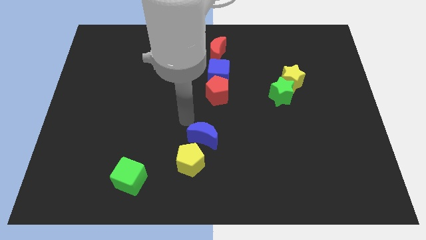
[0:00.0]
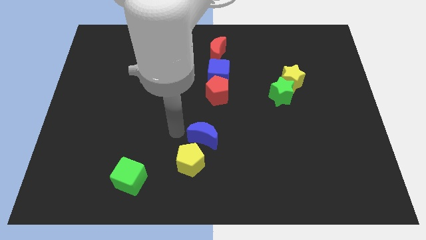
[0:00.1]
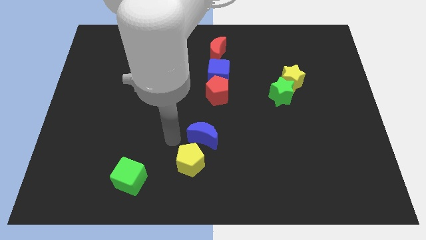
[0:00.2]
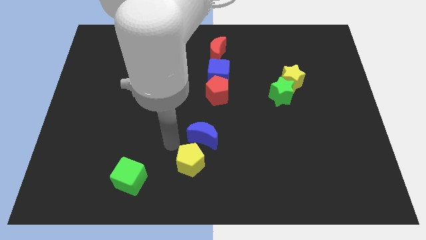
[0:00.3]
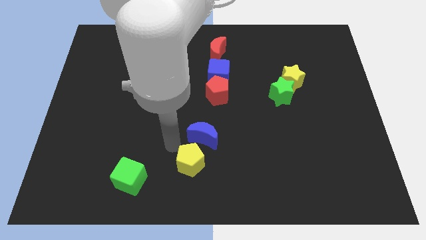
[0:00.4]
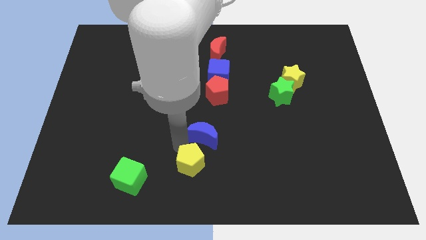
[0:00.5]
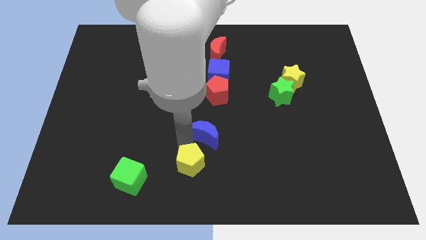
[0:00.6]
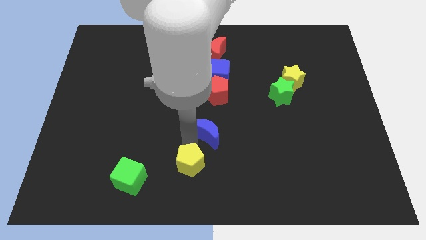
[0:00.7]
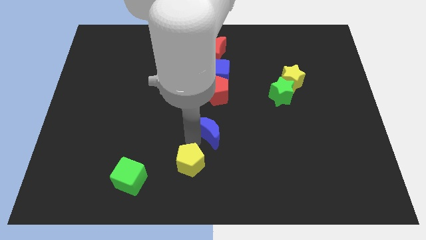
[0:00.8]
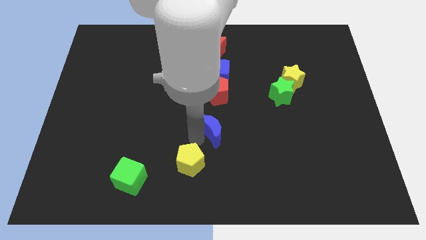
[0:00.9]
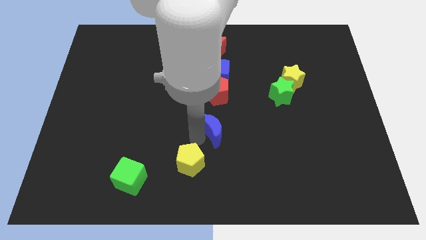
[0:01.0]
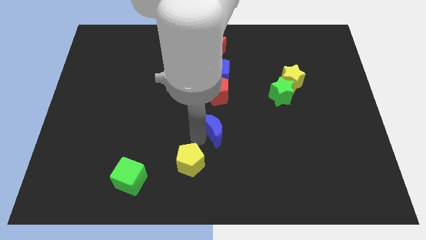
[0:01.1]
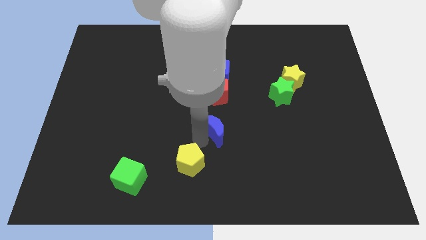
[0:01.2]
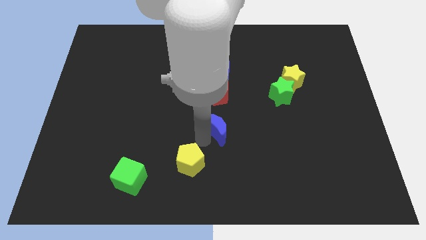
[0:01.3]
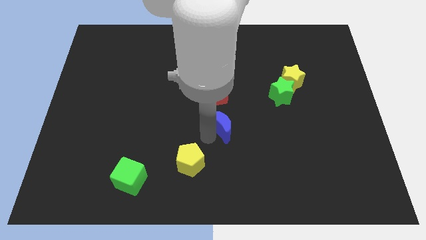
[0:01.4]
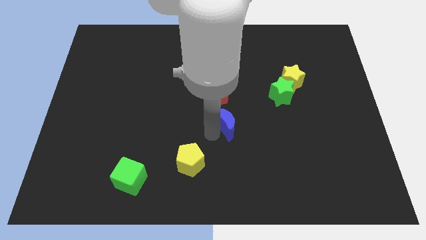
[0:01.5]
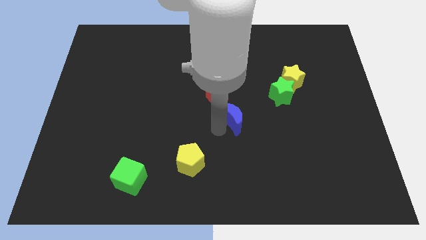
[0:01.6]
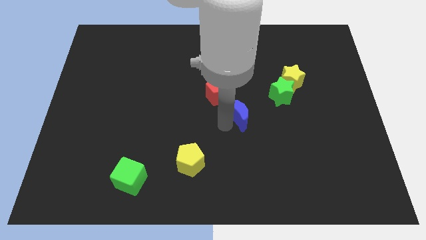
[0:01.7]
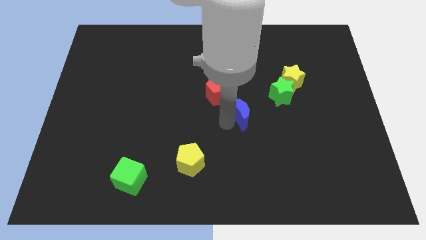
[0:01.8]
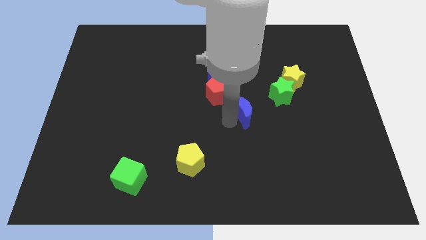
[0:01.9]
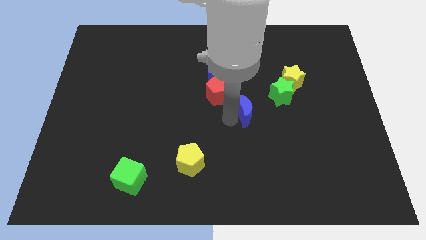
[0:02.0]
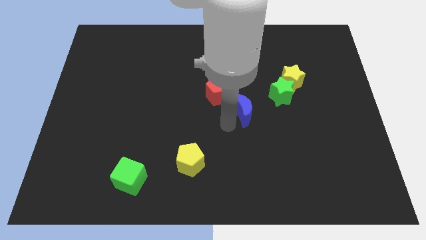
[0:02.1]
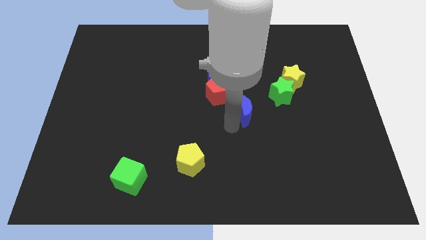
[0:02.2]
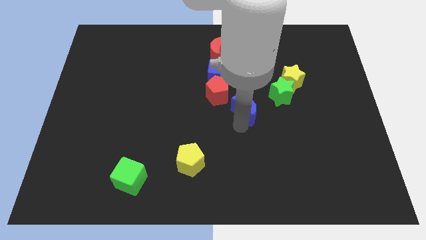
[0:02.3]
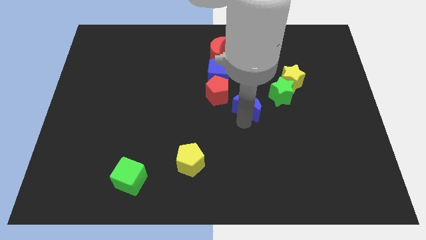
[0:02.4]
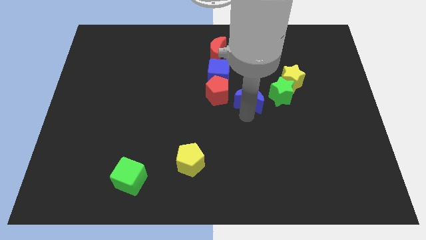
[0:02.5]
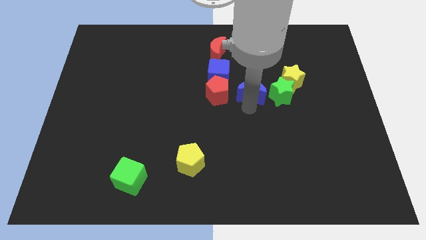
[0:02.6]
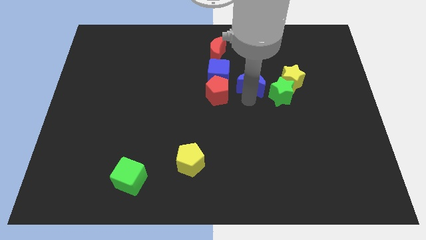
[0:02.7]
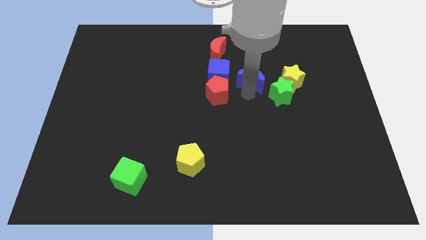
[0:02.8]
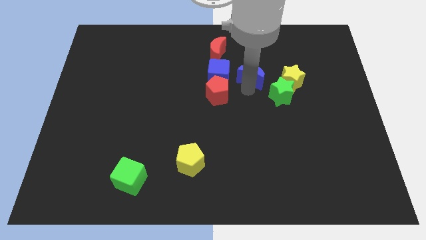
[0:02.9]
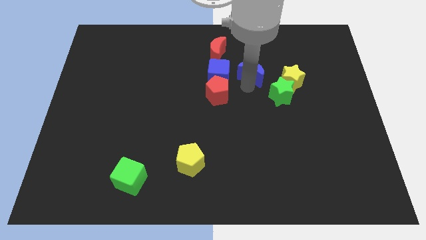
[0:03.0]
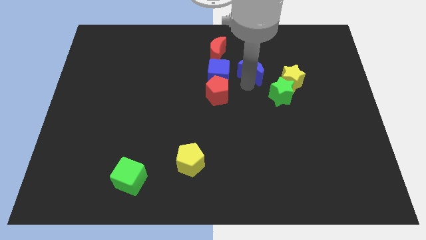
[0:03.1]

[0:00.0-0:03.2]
drag the blue crescent towards the top

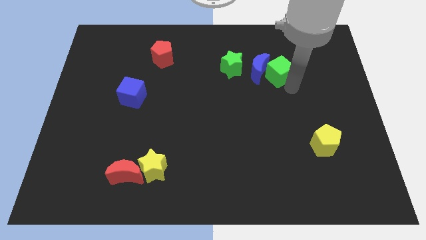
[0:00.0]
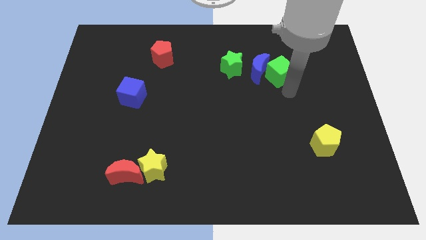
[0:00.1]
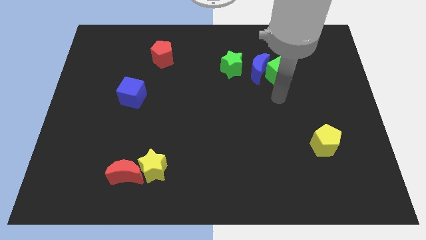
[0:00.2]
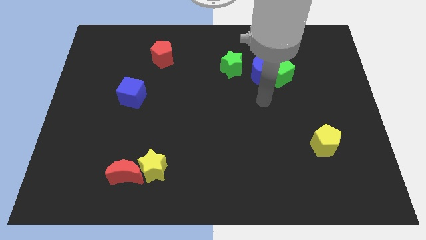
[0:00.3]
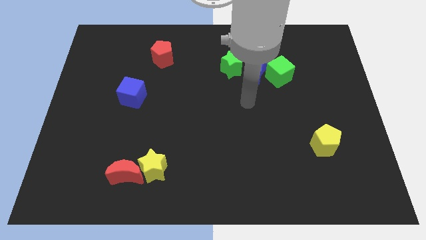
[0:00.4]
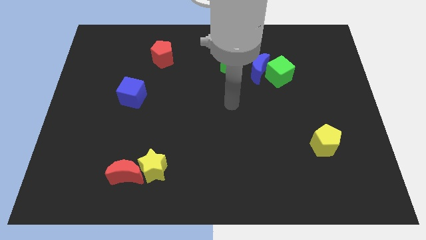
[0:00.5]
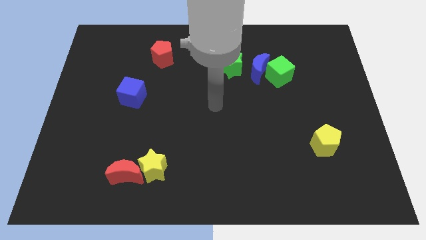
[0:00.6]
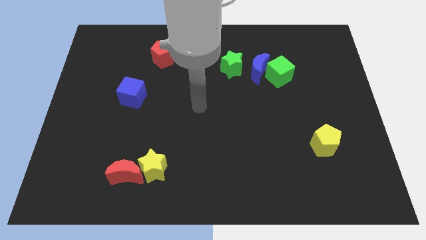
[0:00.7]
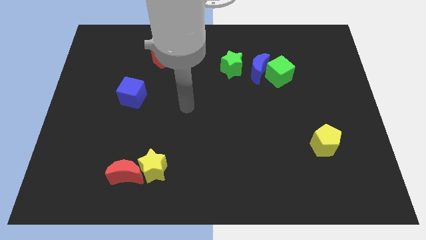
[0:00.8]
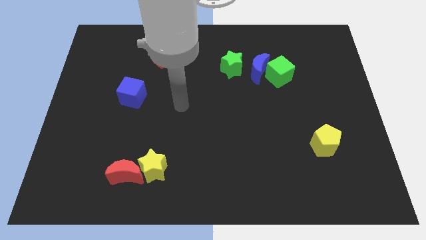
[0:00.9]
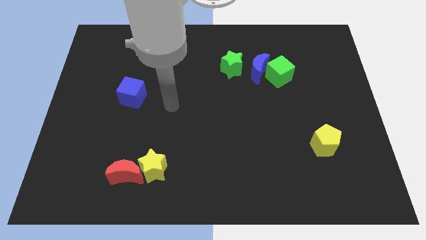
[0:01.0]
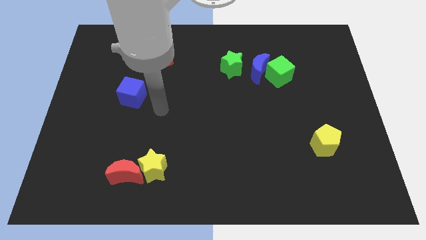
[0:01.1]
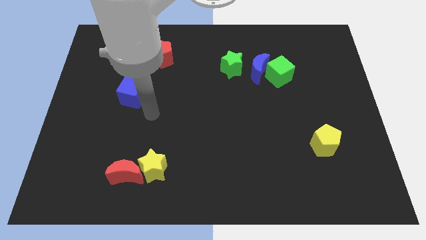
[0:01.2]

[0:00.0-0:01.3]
move your arm away from the green cube

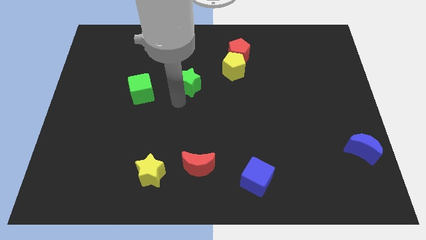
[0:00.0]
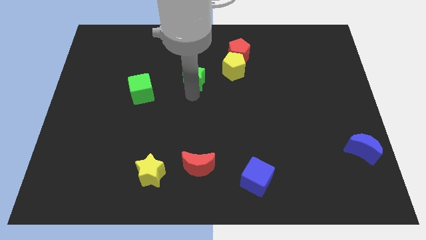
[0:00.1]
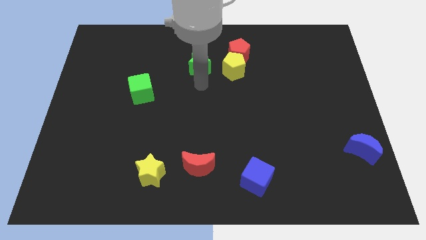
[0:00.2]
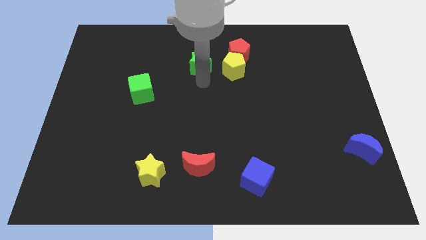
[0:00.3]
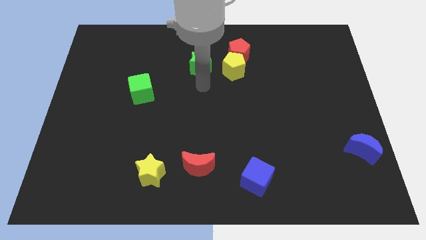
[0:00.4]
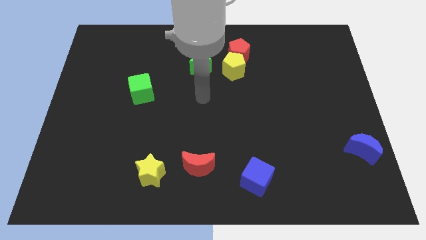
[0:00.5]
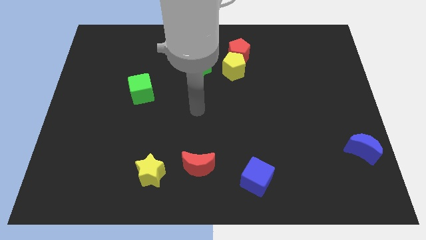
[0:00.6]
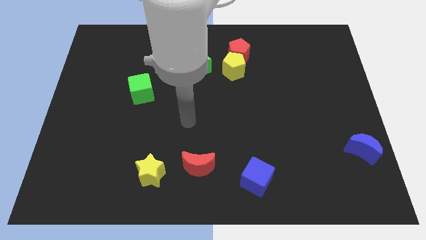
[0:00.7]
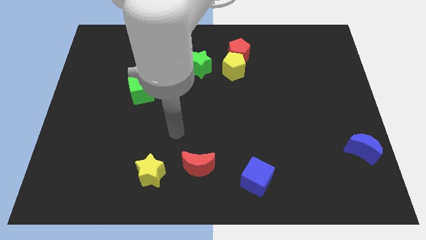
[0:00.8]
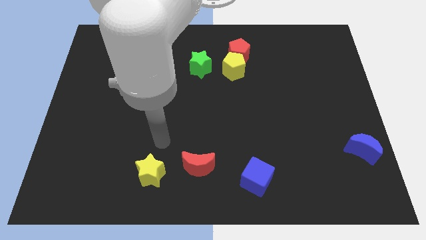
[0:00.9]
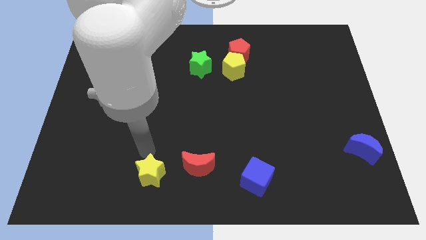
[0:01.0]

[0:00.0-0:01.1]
move the green star slightly towards top center

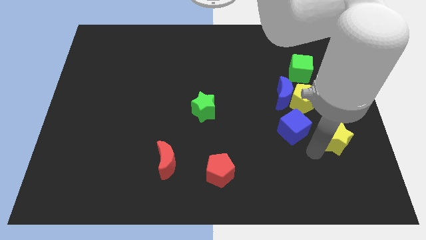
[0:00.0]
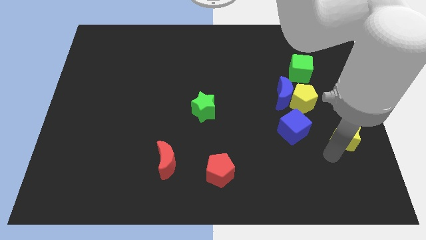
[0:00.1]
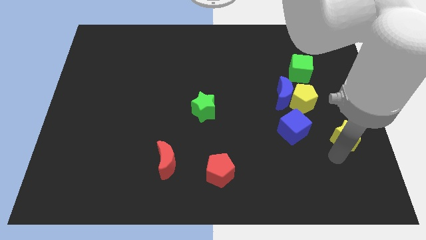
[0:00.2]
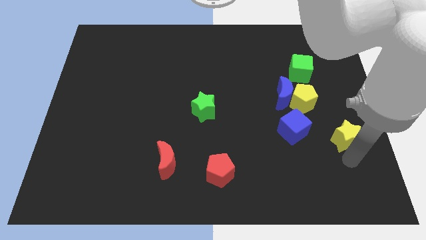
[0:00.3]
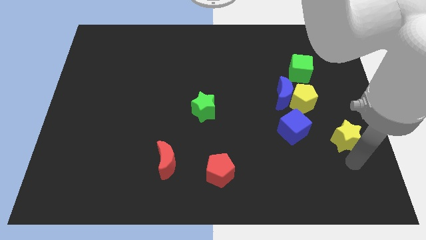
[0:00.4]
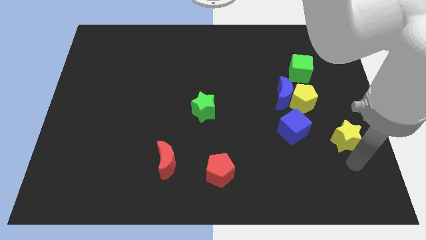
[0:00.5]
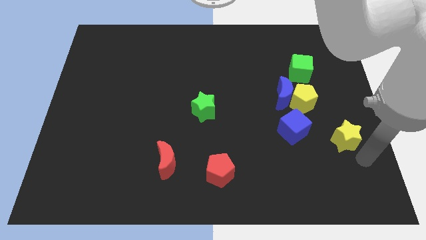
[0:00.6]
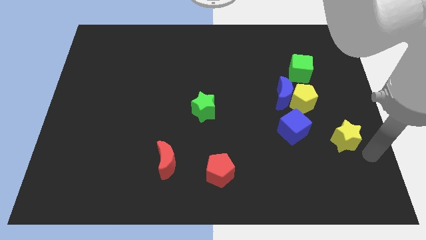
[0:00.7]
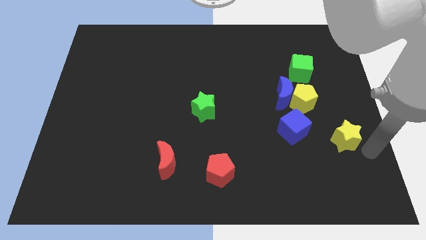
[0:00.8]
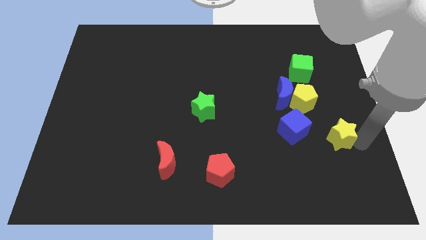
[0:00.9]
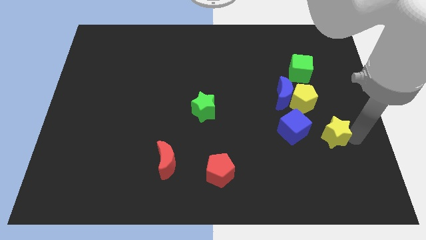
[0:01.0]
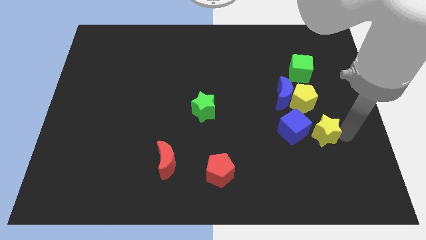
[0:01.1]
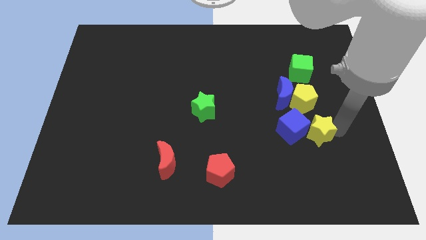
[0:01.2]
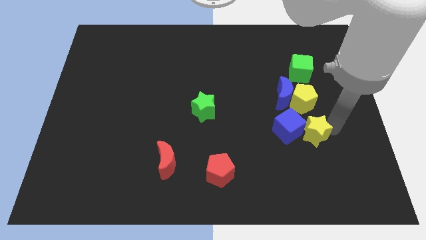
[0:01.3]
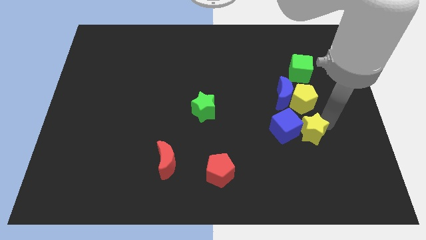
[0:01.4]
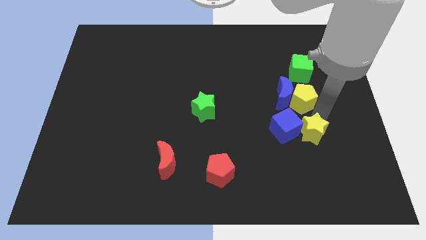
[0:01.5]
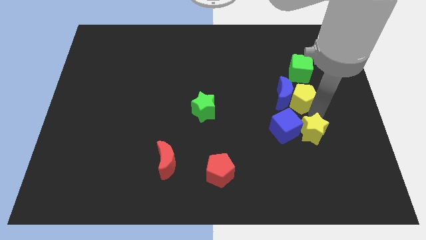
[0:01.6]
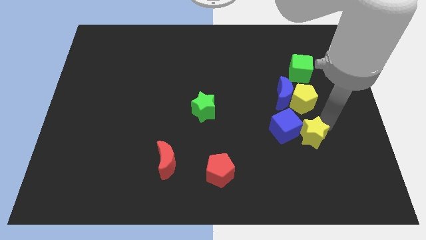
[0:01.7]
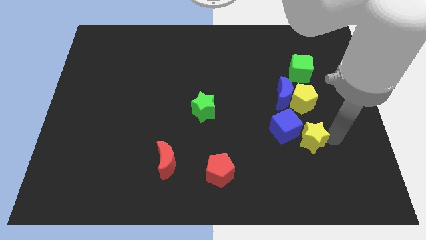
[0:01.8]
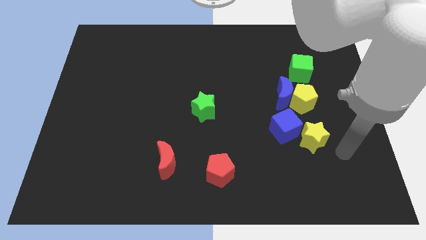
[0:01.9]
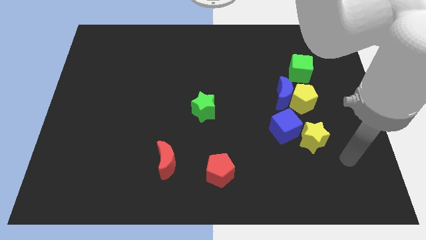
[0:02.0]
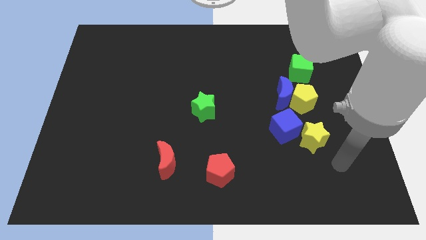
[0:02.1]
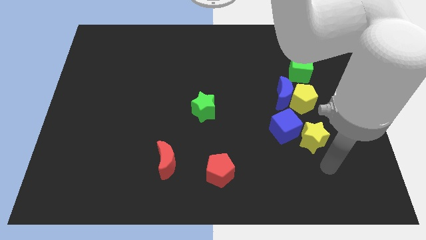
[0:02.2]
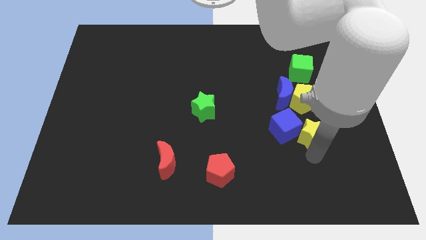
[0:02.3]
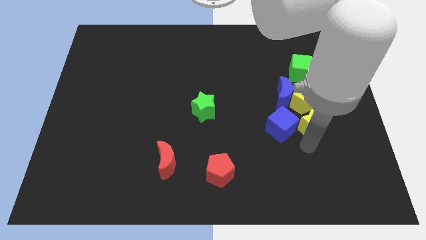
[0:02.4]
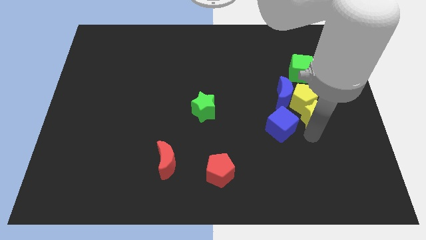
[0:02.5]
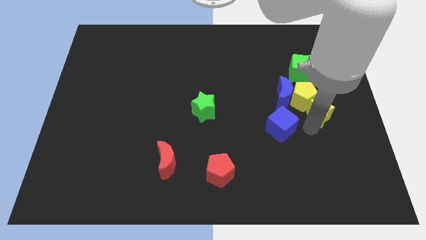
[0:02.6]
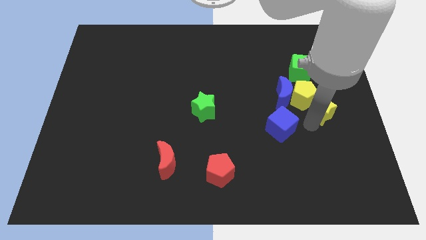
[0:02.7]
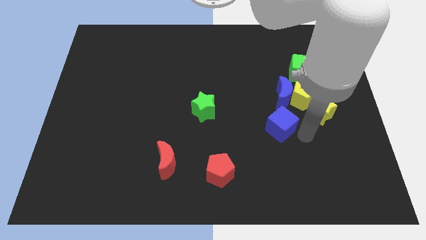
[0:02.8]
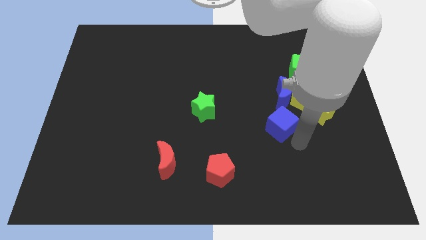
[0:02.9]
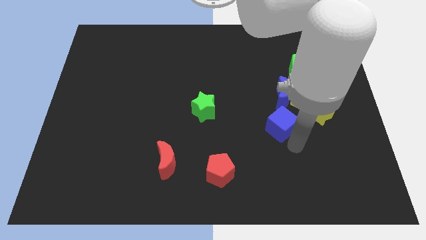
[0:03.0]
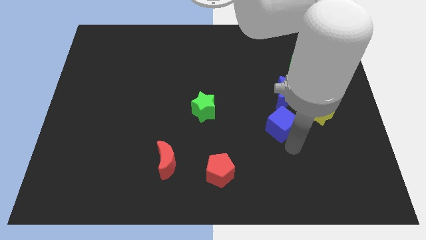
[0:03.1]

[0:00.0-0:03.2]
slide the yellow star to the bottom right of the yellow pentagon
